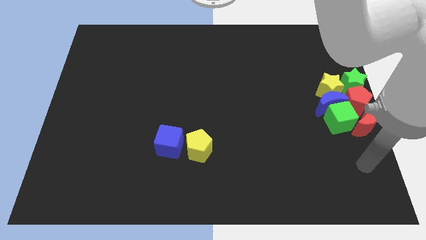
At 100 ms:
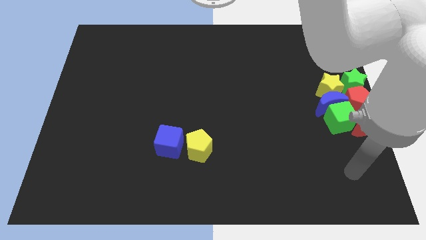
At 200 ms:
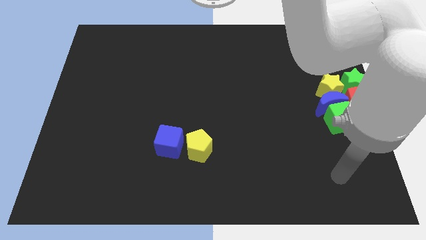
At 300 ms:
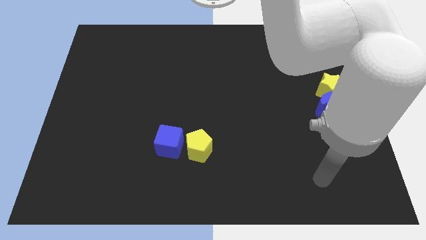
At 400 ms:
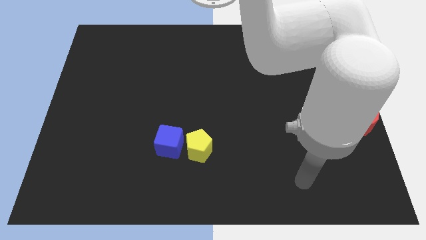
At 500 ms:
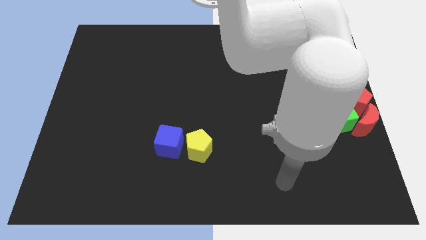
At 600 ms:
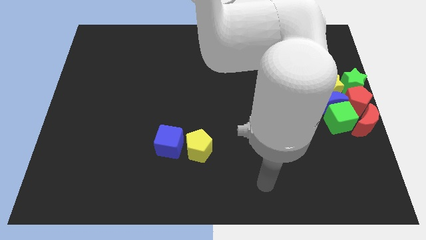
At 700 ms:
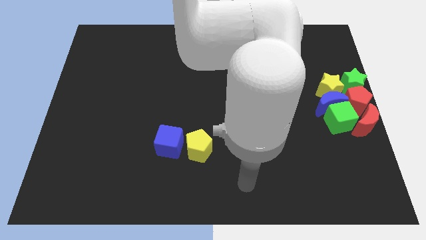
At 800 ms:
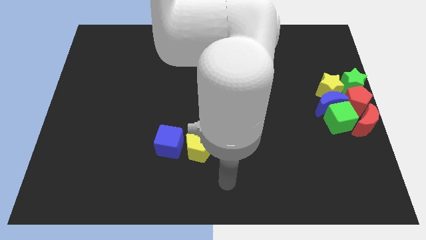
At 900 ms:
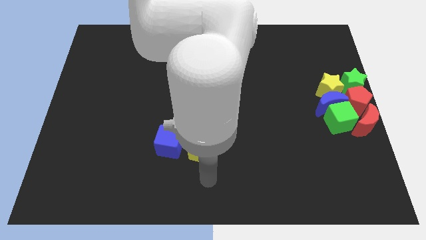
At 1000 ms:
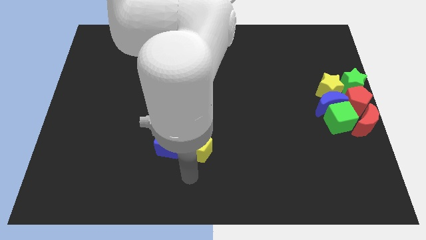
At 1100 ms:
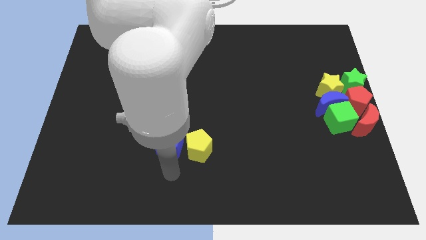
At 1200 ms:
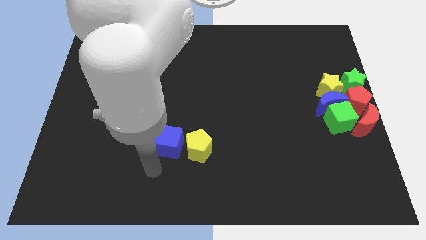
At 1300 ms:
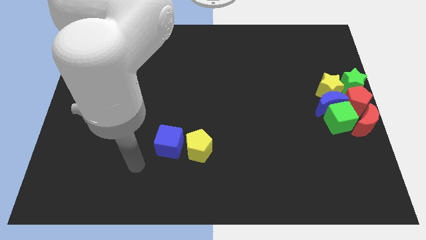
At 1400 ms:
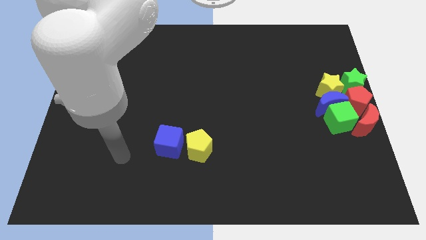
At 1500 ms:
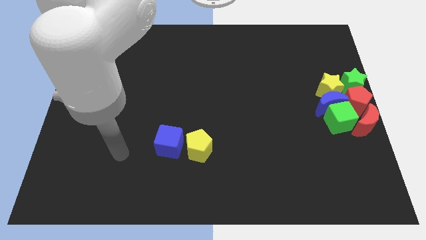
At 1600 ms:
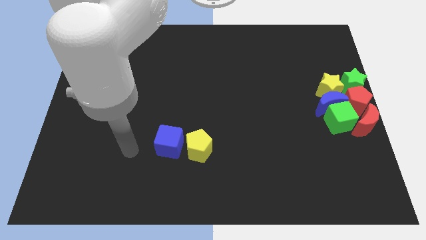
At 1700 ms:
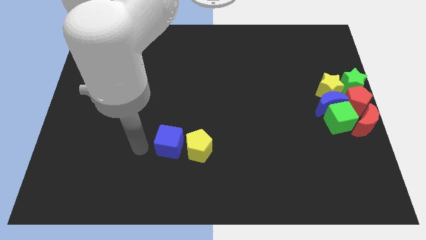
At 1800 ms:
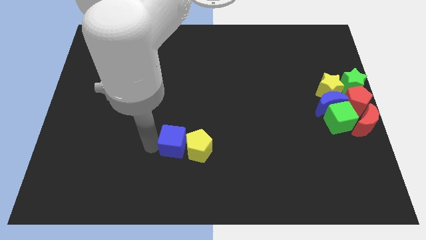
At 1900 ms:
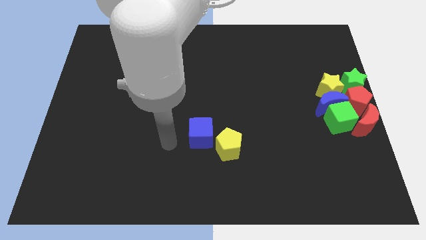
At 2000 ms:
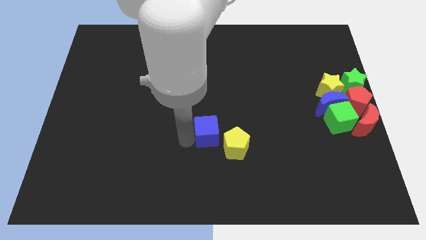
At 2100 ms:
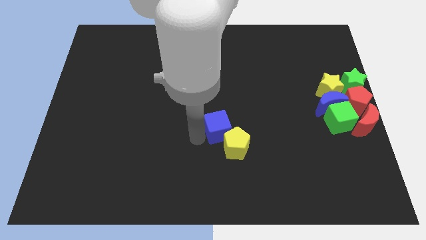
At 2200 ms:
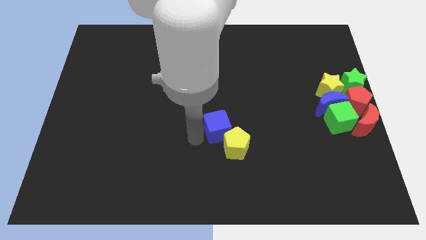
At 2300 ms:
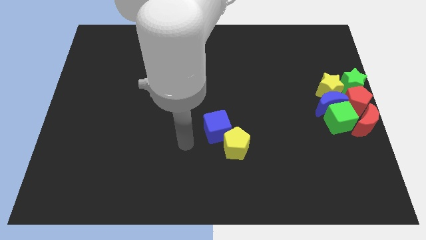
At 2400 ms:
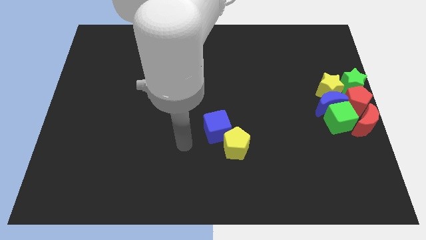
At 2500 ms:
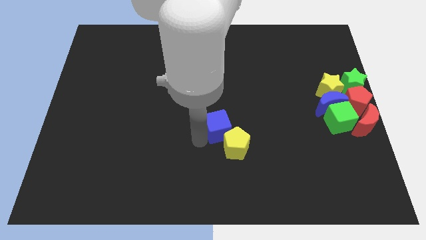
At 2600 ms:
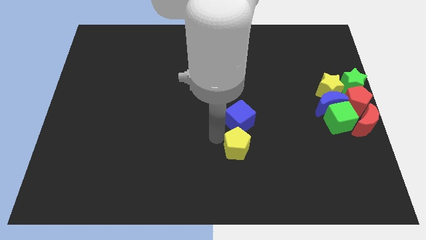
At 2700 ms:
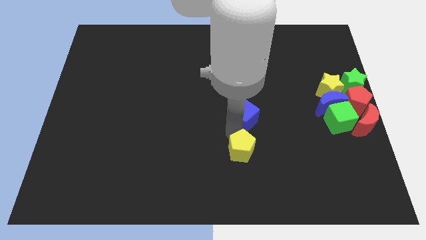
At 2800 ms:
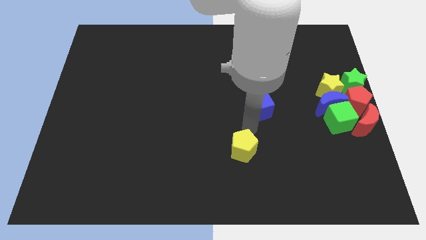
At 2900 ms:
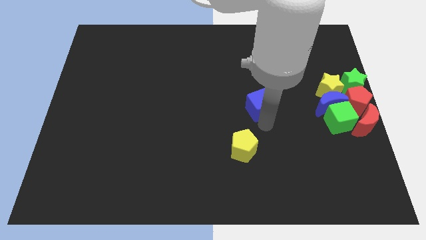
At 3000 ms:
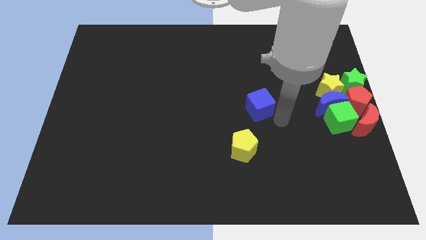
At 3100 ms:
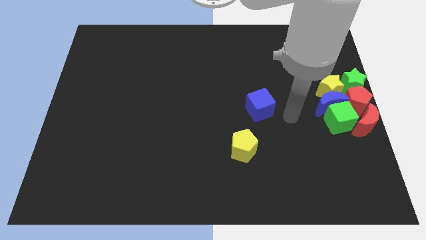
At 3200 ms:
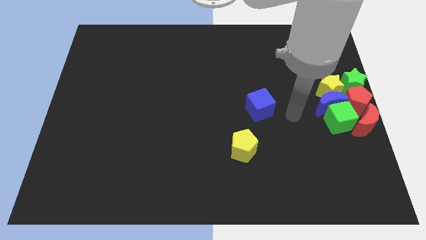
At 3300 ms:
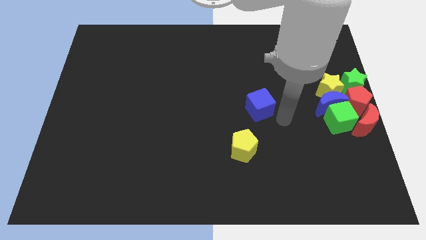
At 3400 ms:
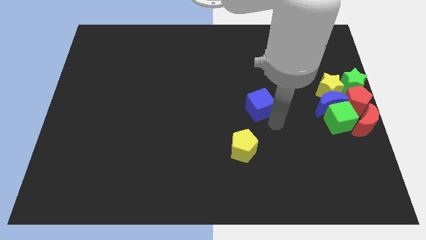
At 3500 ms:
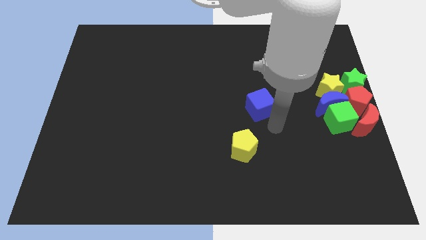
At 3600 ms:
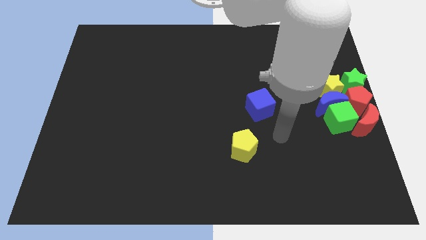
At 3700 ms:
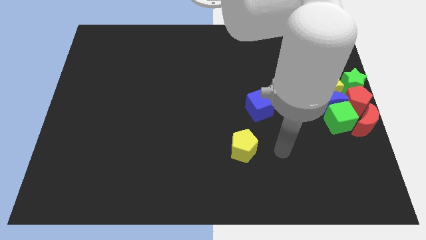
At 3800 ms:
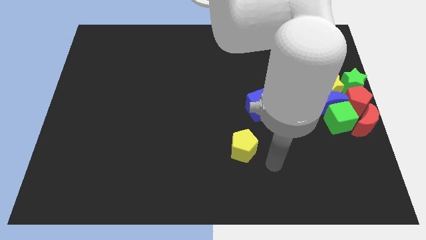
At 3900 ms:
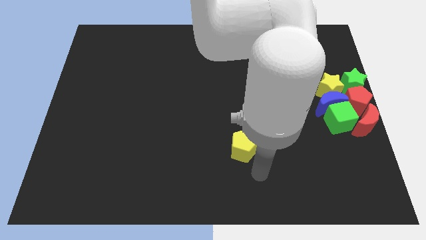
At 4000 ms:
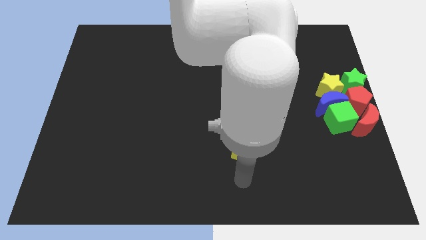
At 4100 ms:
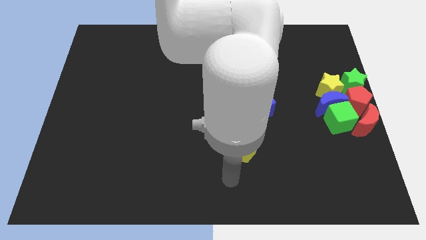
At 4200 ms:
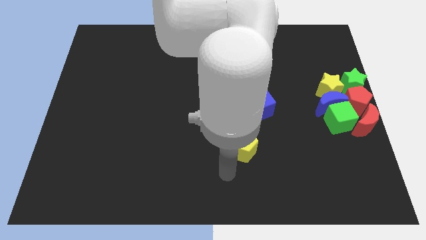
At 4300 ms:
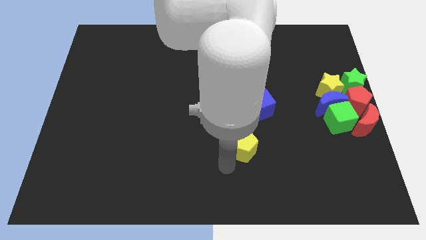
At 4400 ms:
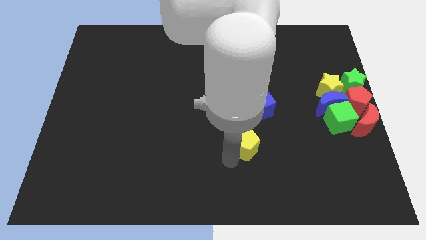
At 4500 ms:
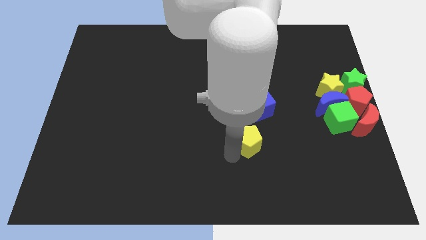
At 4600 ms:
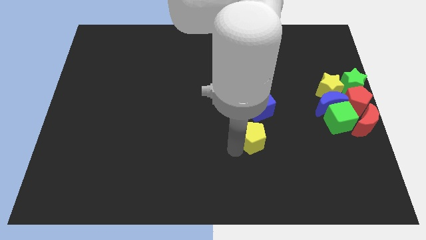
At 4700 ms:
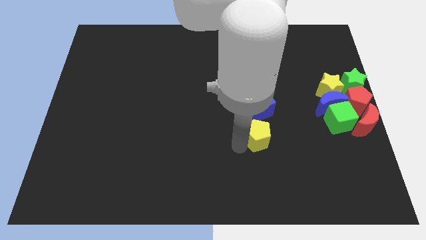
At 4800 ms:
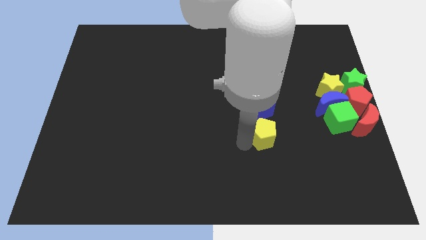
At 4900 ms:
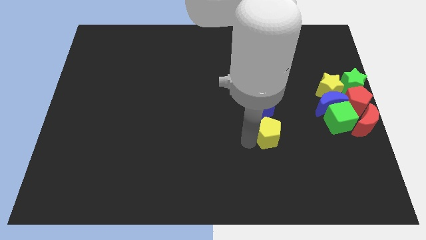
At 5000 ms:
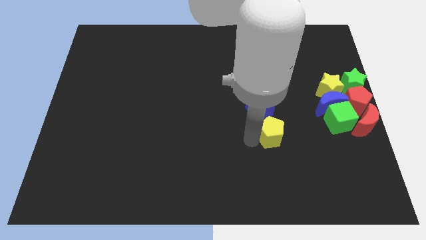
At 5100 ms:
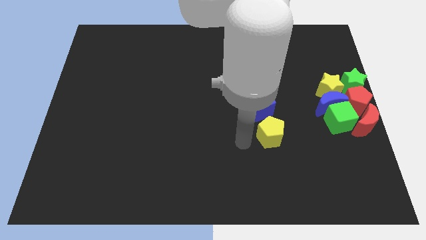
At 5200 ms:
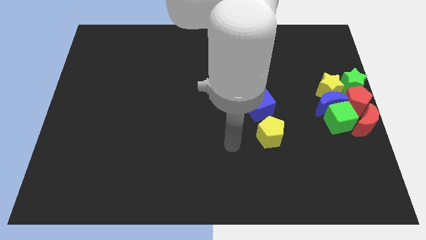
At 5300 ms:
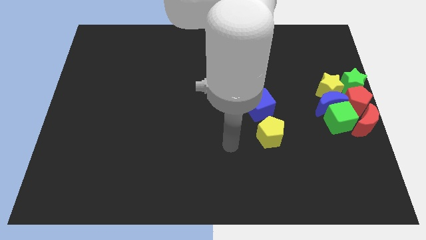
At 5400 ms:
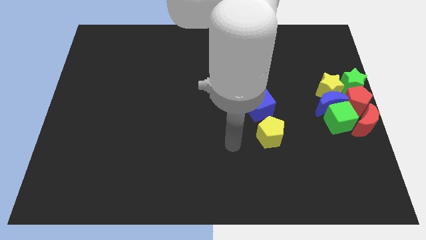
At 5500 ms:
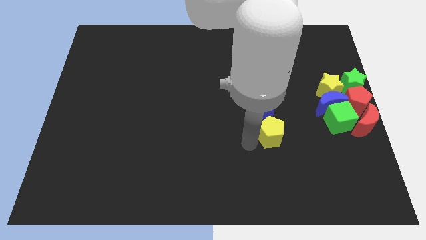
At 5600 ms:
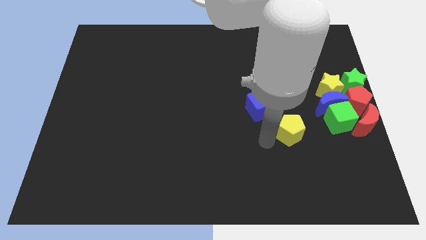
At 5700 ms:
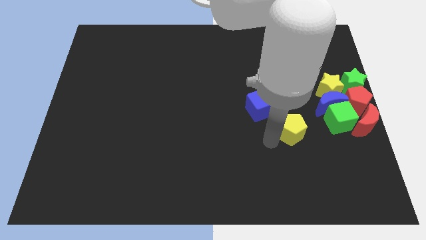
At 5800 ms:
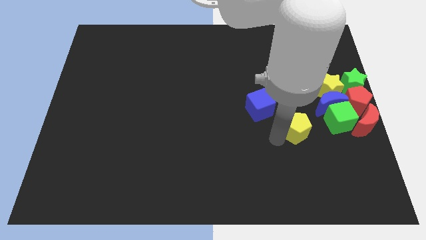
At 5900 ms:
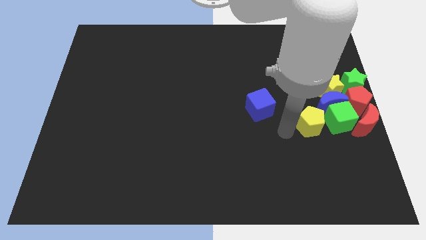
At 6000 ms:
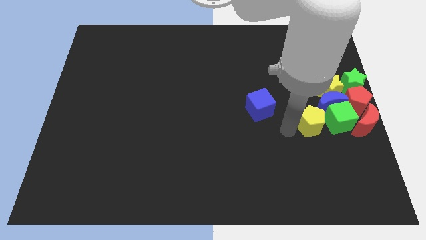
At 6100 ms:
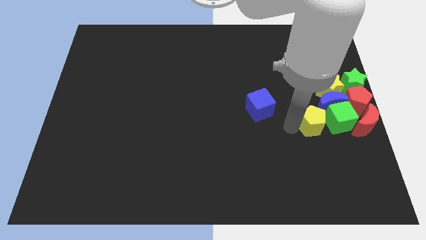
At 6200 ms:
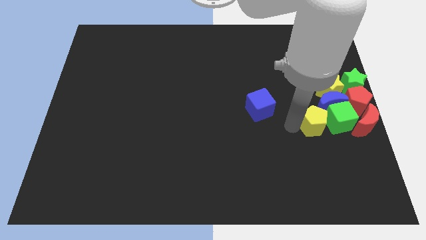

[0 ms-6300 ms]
push the yellow pentagon close to the green cube

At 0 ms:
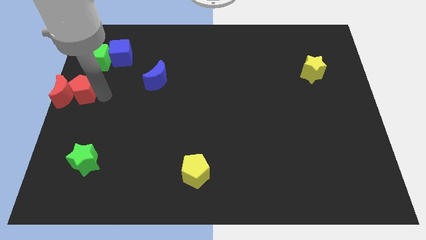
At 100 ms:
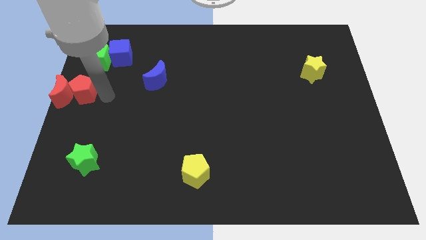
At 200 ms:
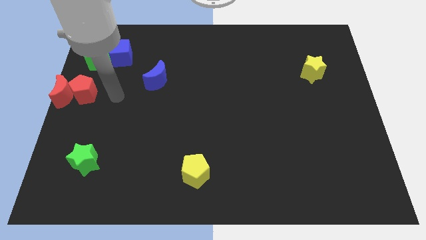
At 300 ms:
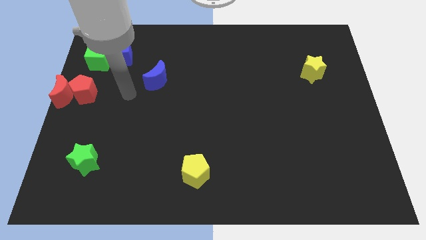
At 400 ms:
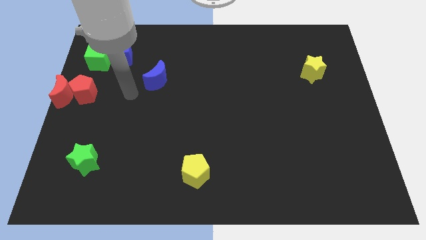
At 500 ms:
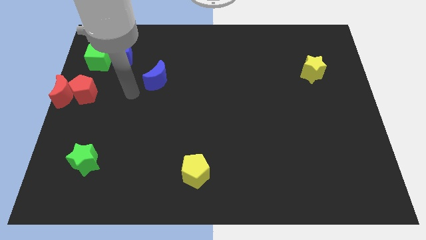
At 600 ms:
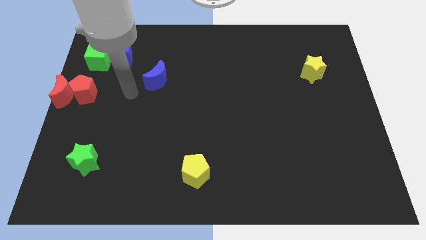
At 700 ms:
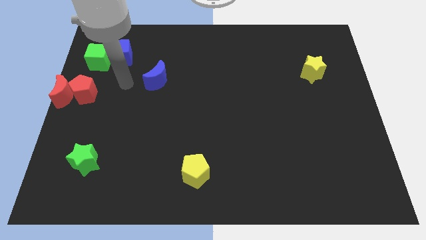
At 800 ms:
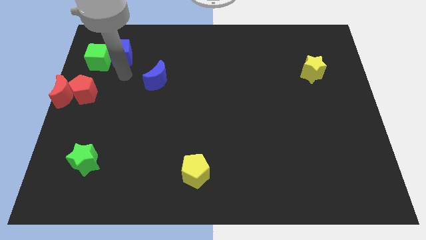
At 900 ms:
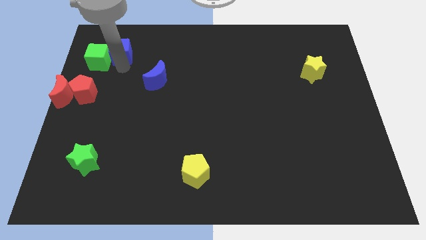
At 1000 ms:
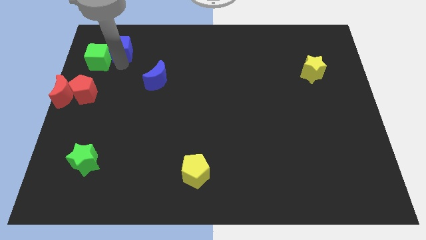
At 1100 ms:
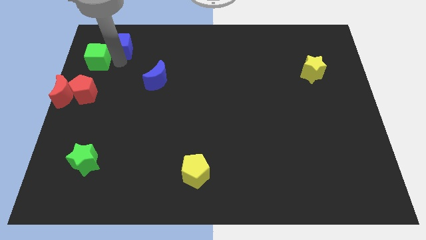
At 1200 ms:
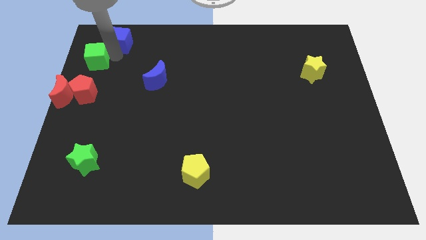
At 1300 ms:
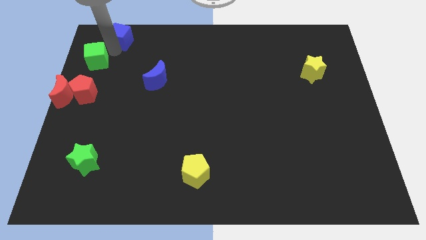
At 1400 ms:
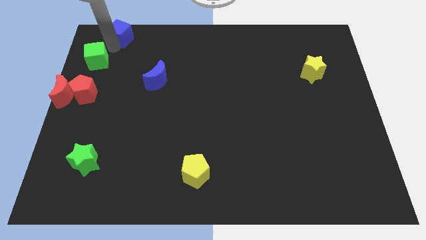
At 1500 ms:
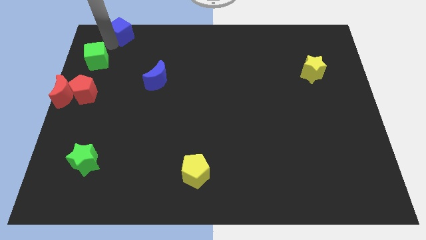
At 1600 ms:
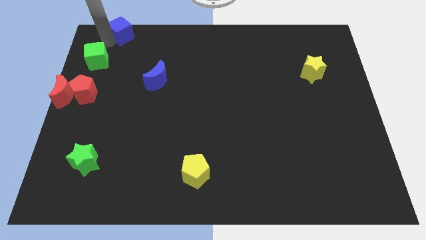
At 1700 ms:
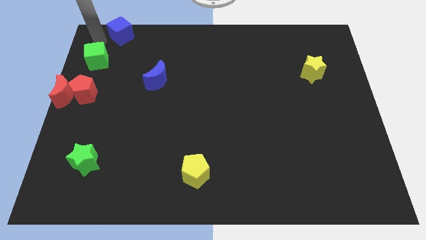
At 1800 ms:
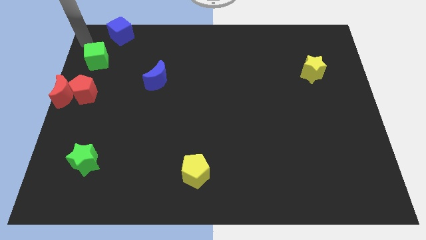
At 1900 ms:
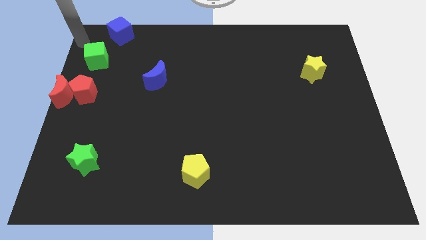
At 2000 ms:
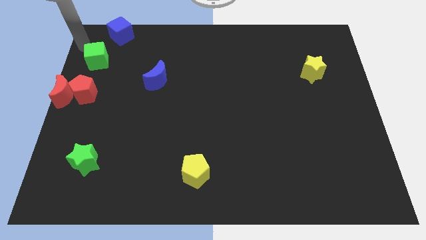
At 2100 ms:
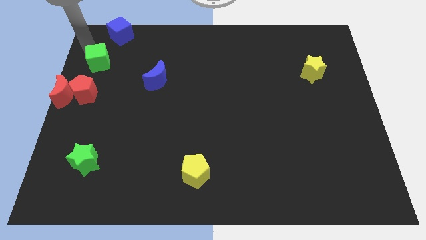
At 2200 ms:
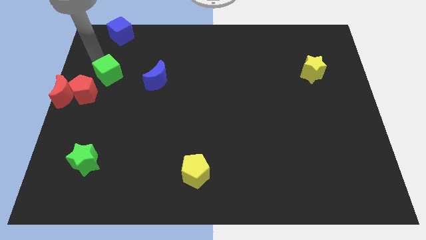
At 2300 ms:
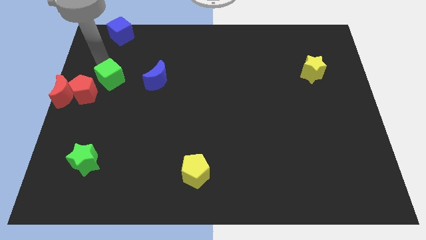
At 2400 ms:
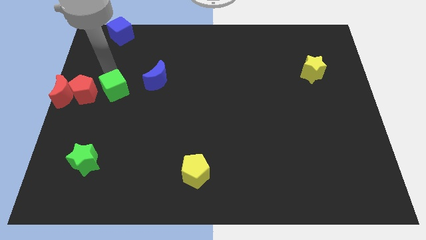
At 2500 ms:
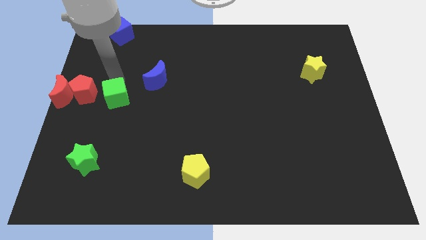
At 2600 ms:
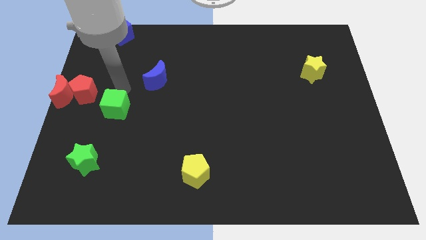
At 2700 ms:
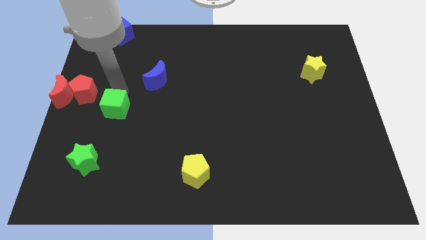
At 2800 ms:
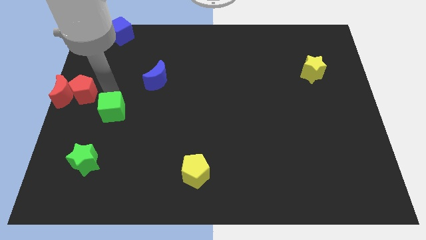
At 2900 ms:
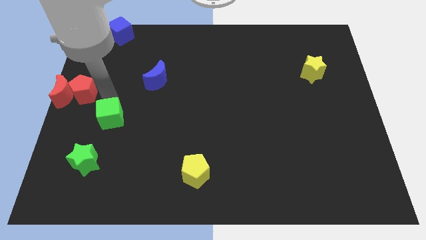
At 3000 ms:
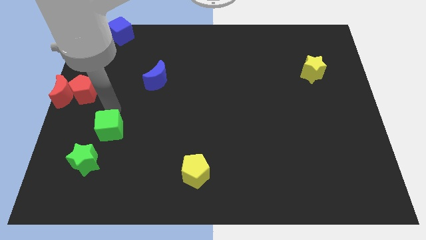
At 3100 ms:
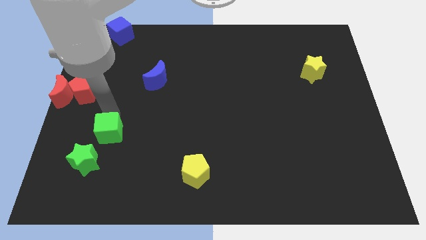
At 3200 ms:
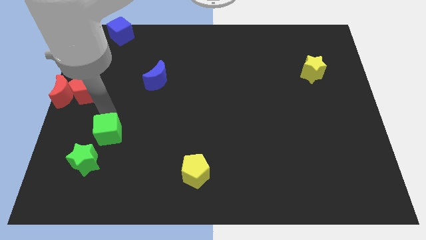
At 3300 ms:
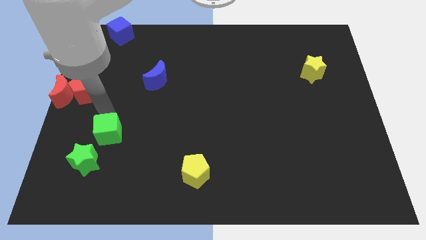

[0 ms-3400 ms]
move your arm away from the red pentagon
